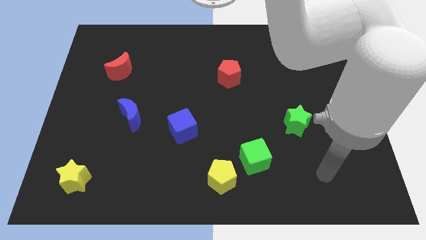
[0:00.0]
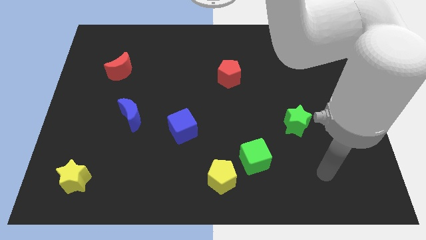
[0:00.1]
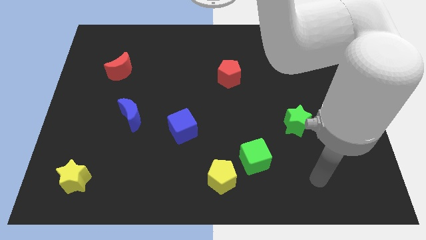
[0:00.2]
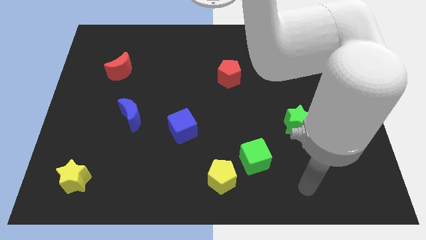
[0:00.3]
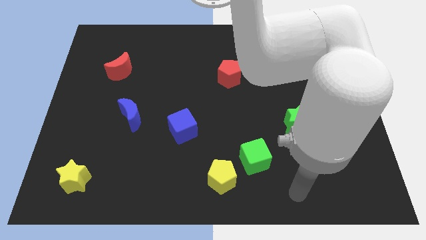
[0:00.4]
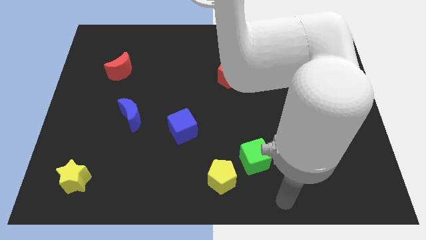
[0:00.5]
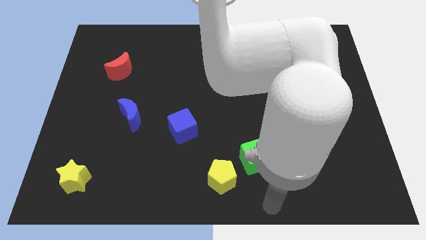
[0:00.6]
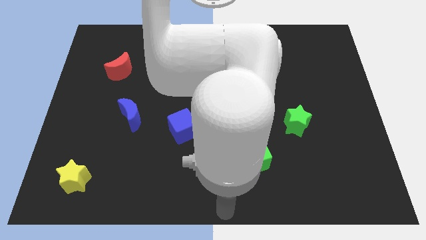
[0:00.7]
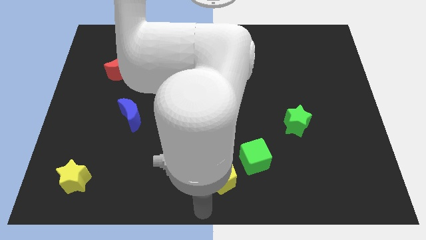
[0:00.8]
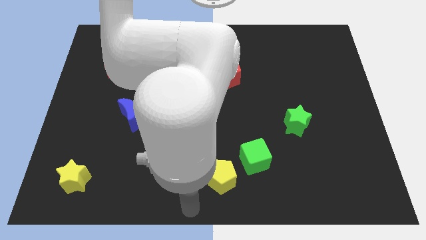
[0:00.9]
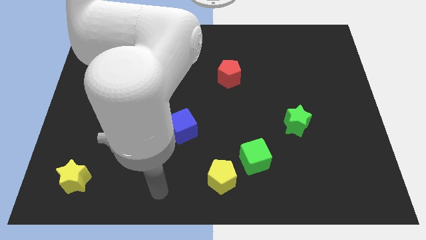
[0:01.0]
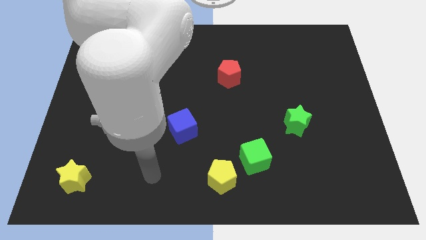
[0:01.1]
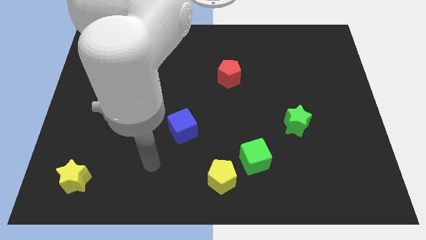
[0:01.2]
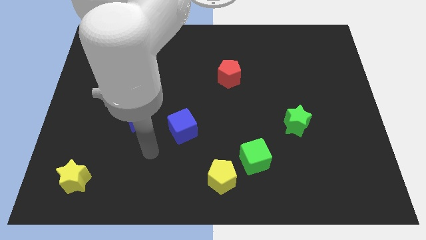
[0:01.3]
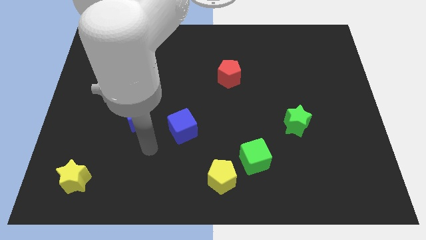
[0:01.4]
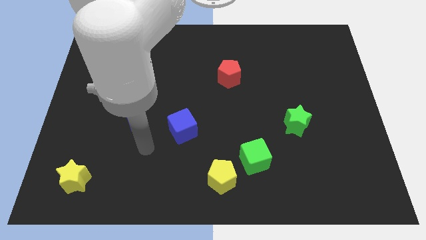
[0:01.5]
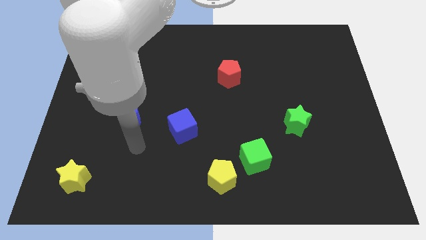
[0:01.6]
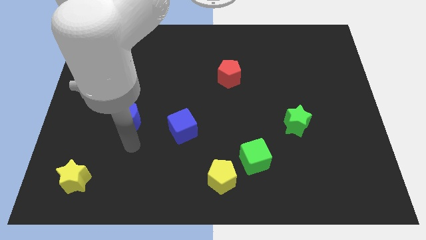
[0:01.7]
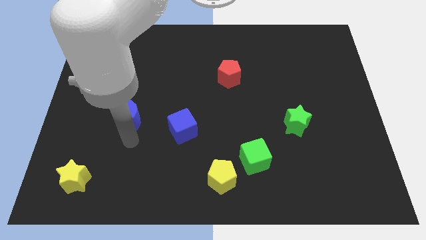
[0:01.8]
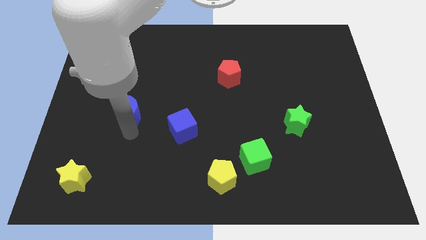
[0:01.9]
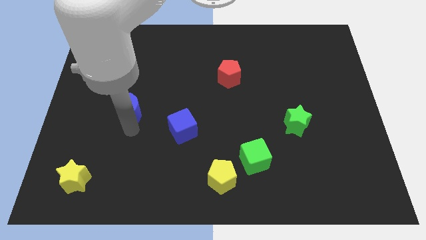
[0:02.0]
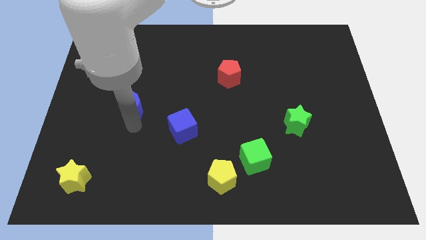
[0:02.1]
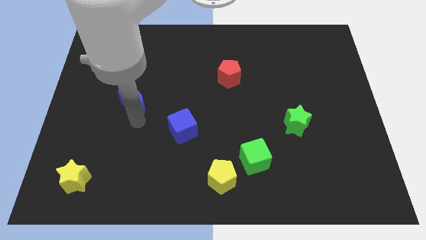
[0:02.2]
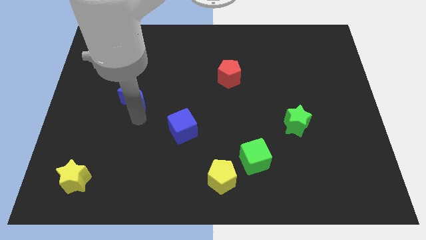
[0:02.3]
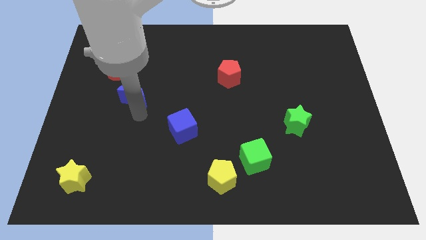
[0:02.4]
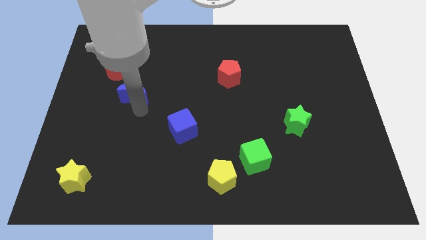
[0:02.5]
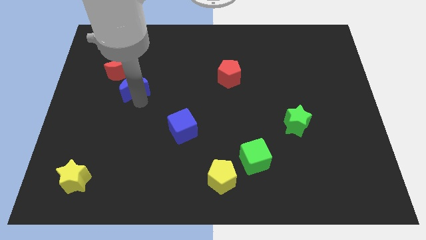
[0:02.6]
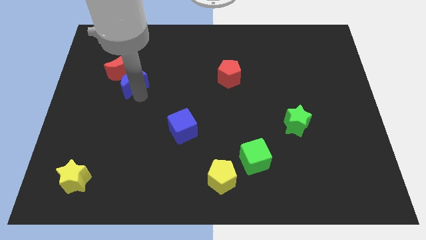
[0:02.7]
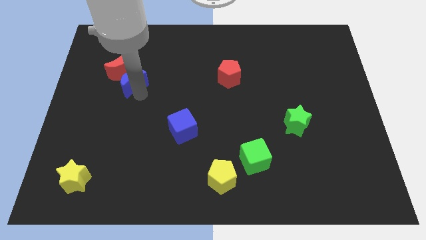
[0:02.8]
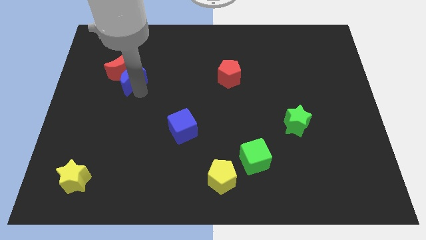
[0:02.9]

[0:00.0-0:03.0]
move the blue moon close to the red moon

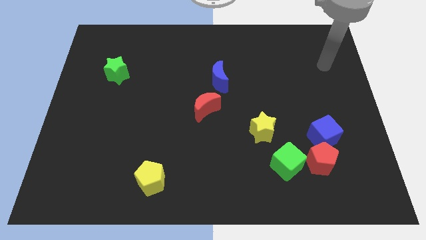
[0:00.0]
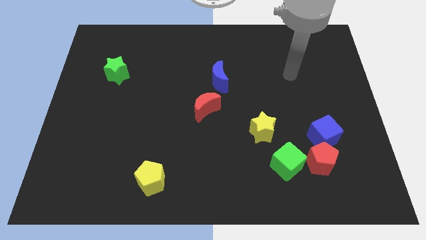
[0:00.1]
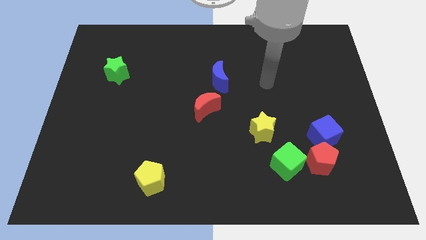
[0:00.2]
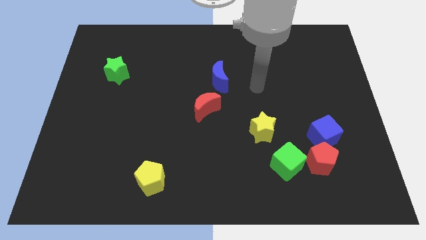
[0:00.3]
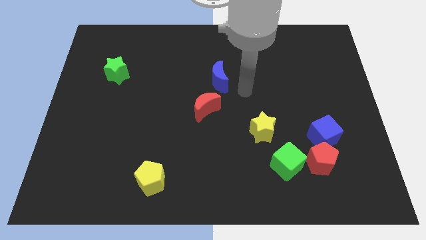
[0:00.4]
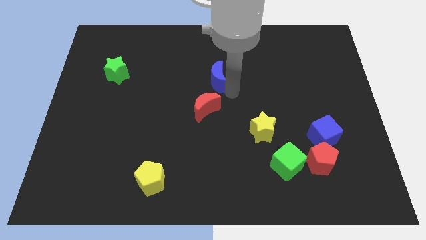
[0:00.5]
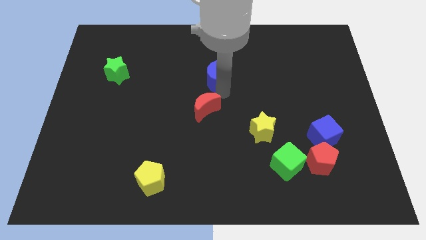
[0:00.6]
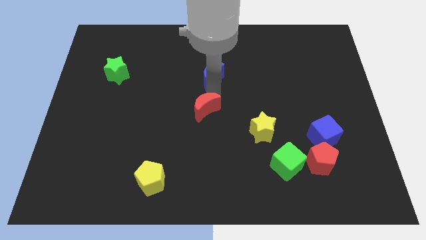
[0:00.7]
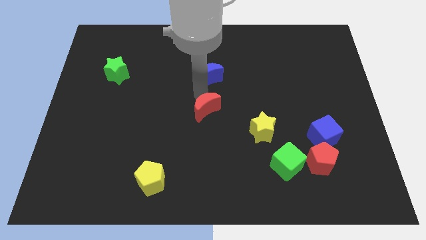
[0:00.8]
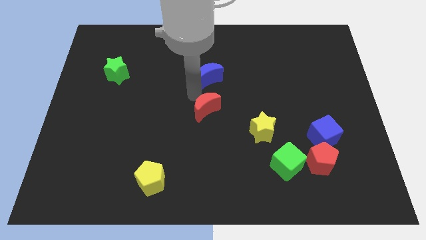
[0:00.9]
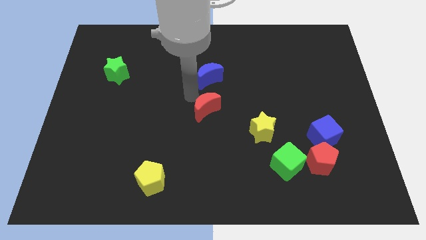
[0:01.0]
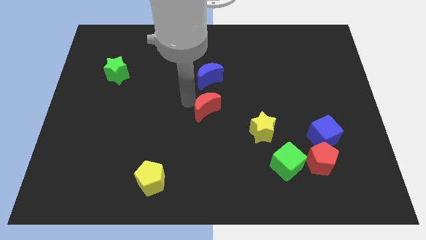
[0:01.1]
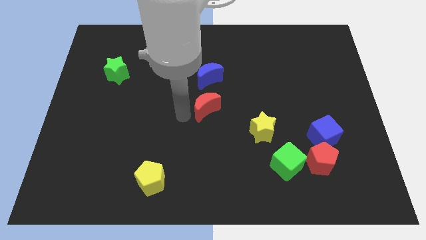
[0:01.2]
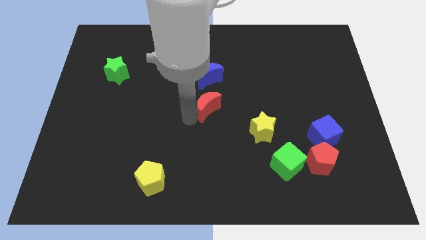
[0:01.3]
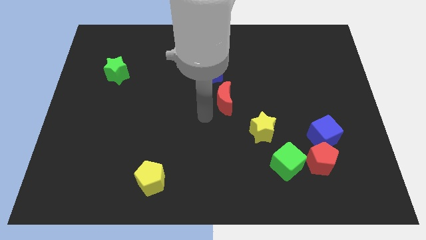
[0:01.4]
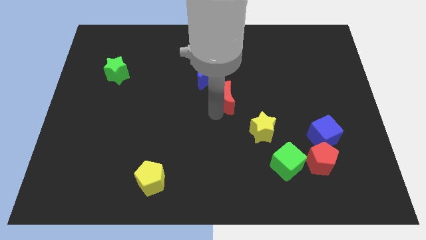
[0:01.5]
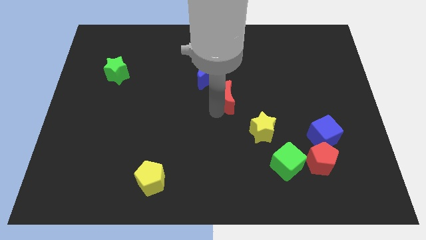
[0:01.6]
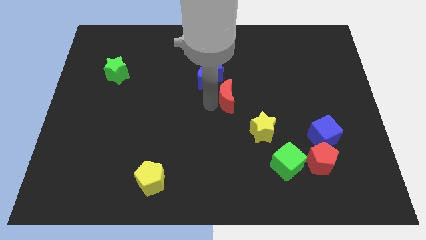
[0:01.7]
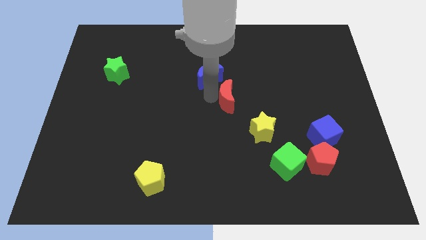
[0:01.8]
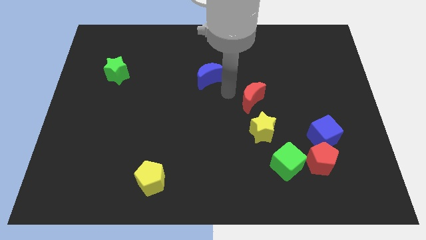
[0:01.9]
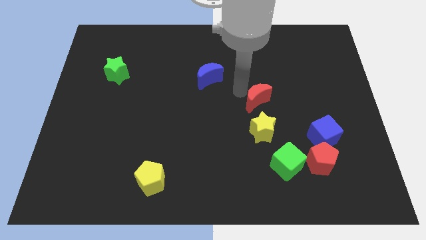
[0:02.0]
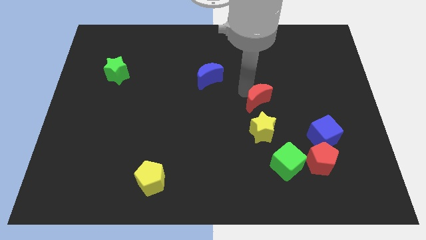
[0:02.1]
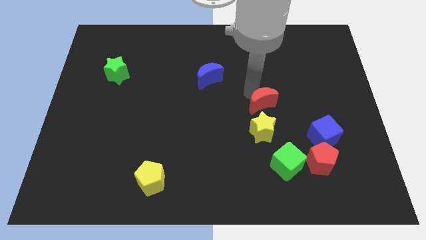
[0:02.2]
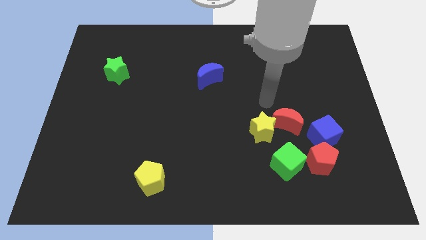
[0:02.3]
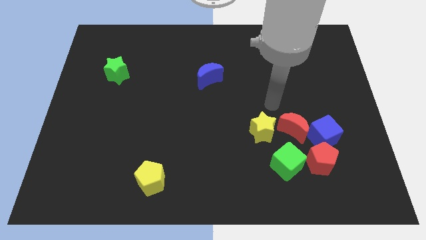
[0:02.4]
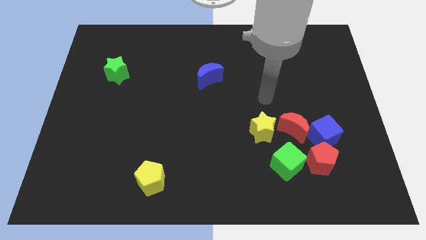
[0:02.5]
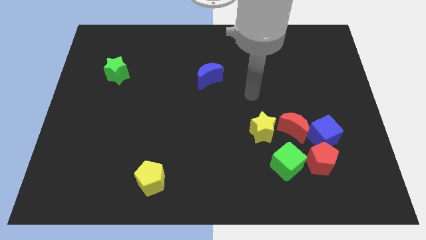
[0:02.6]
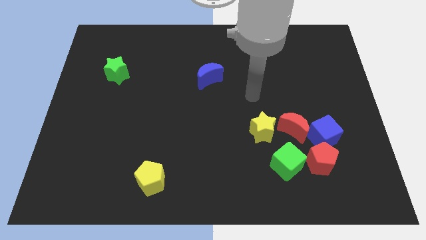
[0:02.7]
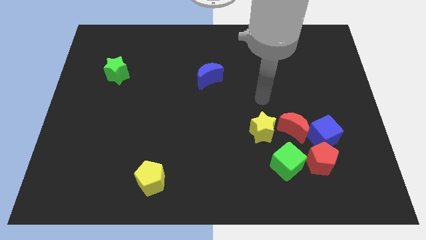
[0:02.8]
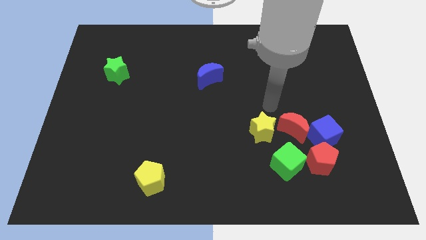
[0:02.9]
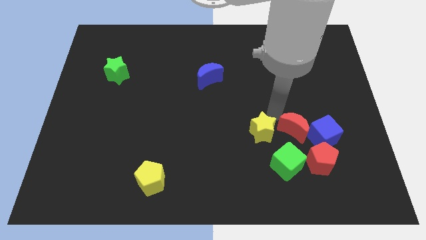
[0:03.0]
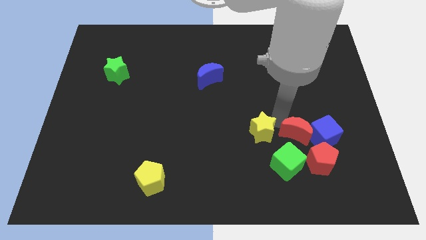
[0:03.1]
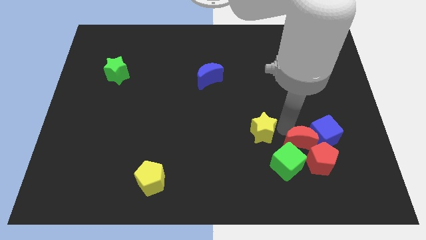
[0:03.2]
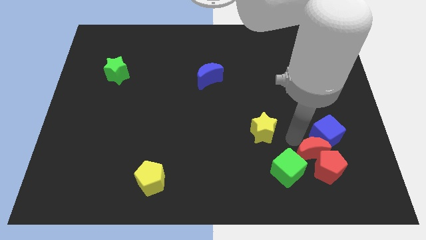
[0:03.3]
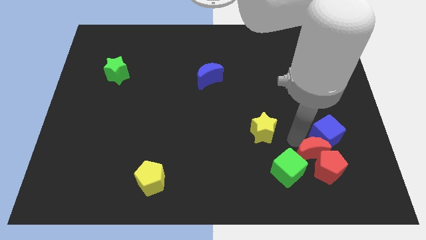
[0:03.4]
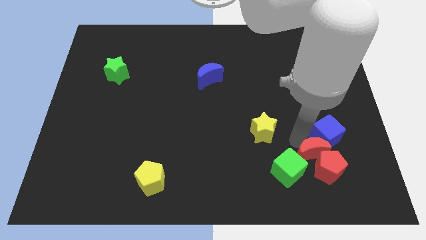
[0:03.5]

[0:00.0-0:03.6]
push the red moon close to the red pentagon

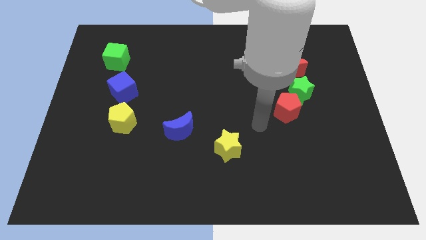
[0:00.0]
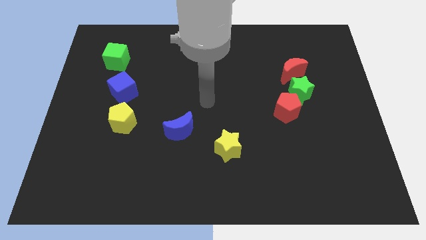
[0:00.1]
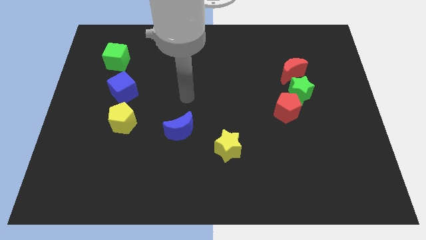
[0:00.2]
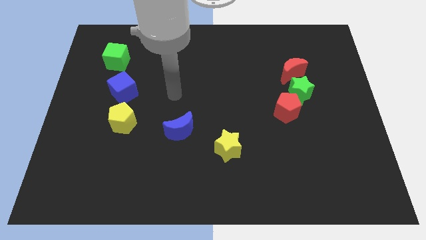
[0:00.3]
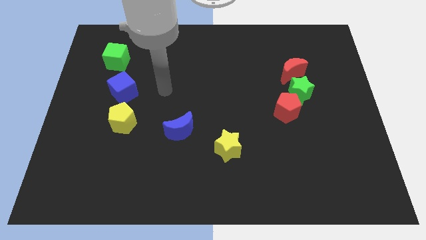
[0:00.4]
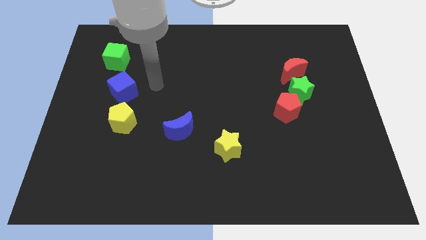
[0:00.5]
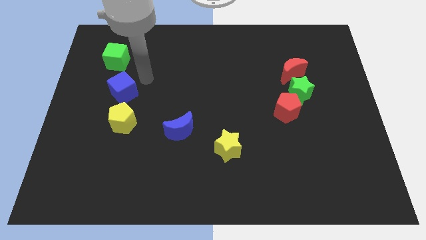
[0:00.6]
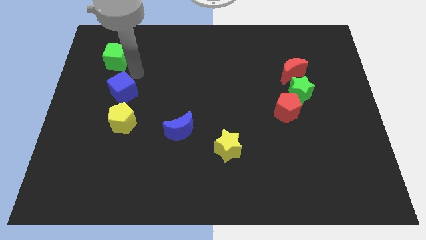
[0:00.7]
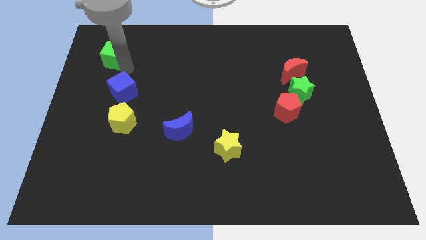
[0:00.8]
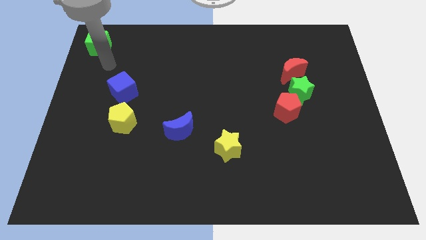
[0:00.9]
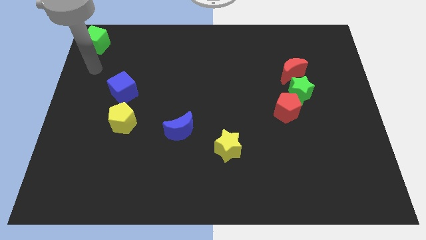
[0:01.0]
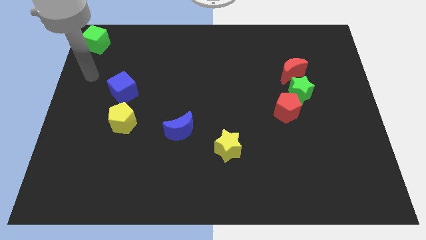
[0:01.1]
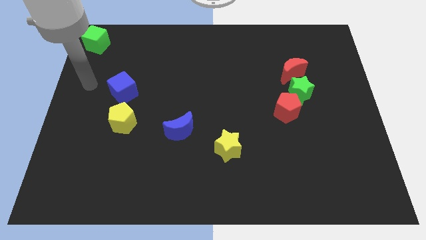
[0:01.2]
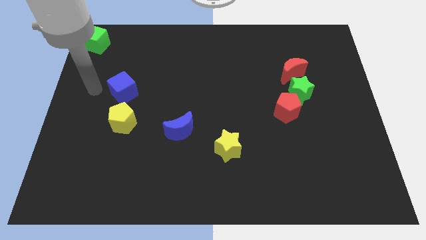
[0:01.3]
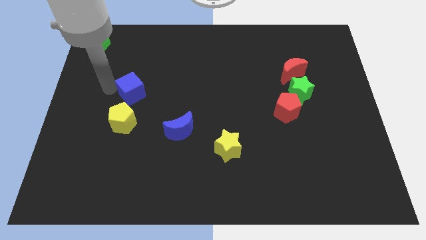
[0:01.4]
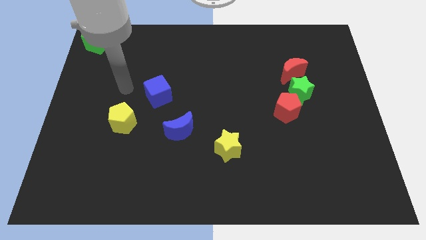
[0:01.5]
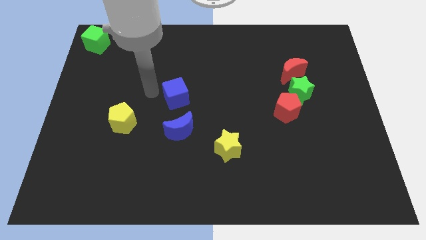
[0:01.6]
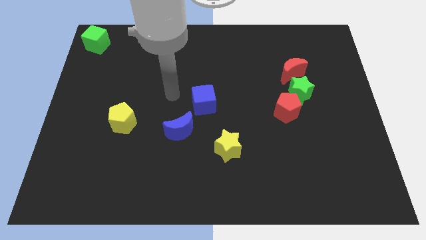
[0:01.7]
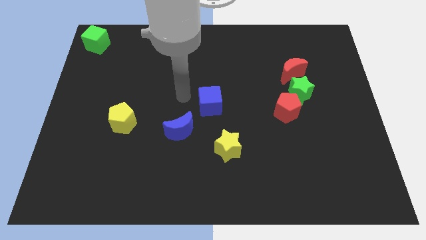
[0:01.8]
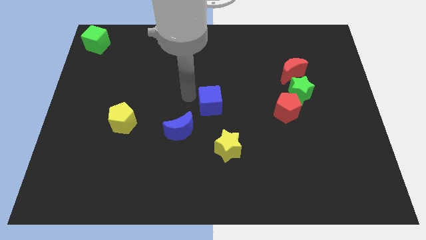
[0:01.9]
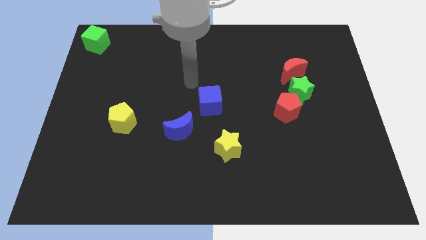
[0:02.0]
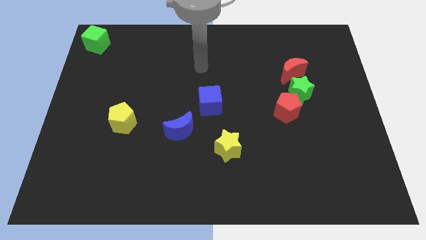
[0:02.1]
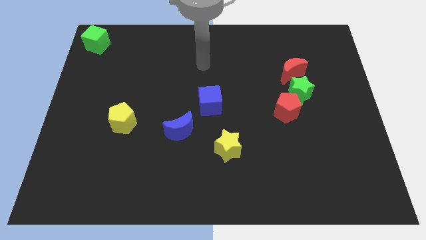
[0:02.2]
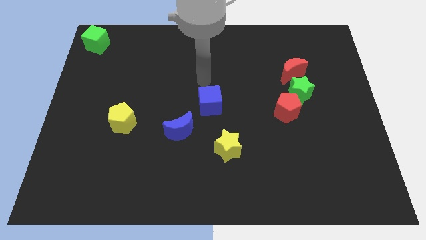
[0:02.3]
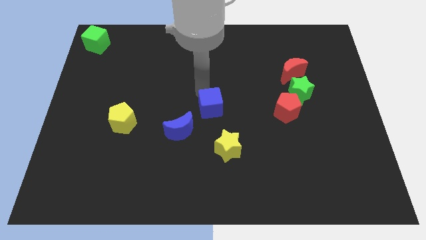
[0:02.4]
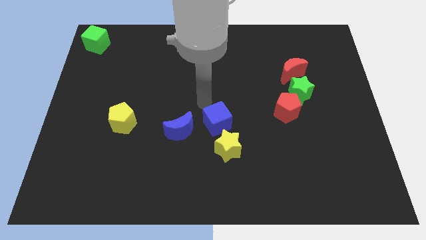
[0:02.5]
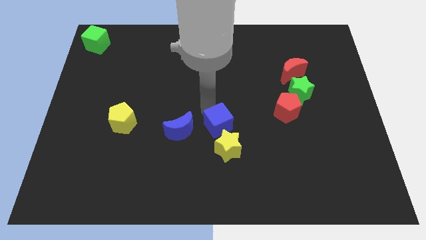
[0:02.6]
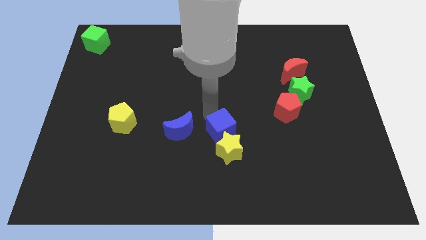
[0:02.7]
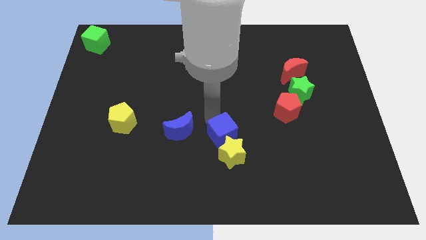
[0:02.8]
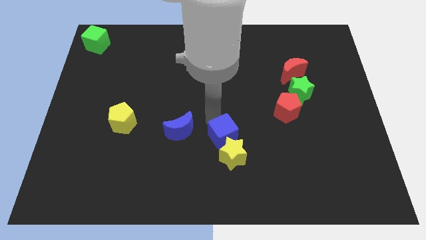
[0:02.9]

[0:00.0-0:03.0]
move the blue cube to the yellow star
